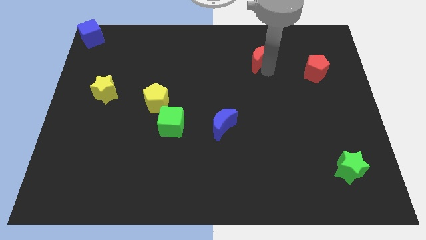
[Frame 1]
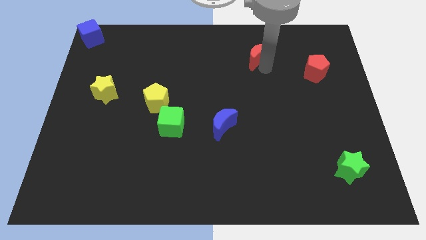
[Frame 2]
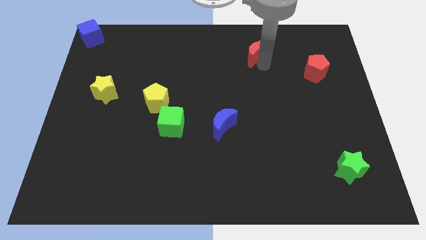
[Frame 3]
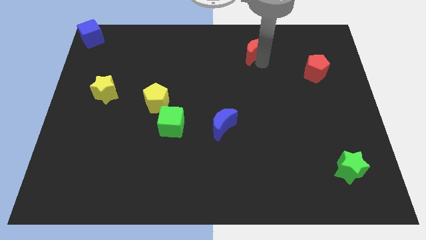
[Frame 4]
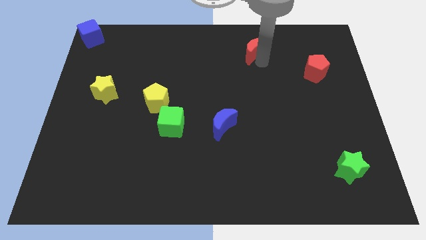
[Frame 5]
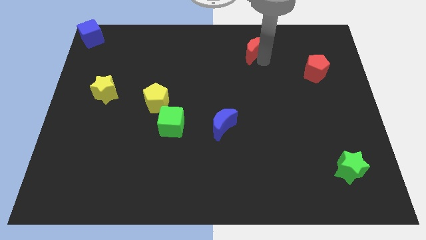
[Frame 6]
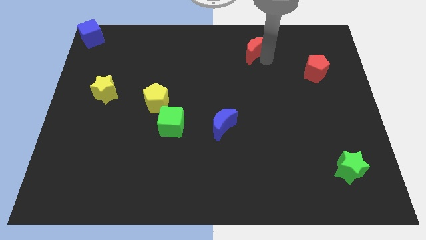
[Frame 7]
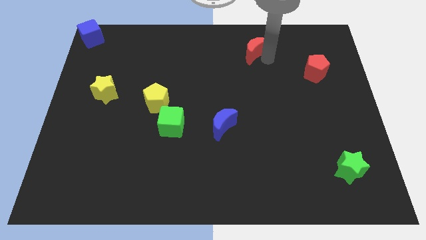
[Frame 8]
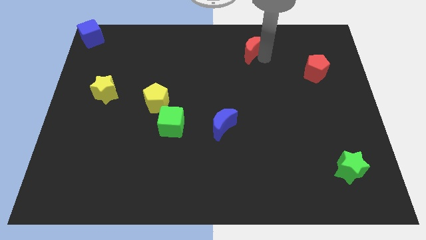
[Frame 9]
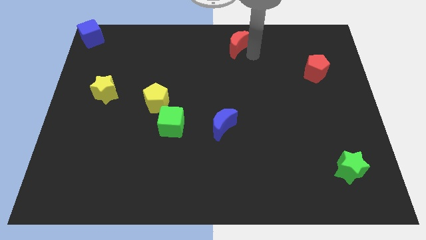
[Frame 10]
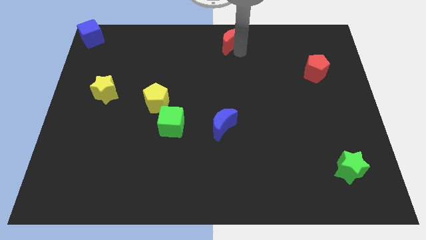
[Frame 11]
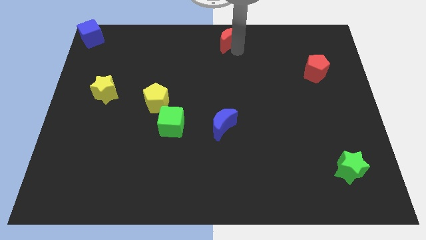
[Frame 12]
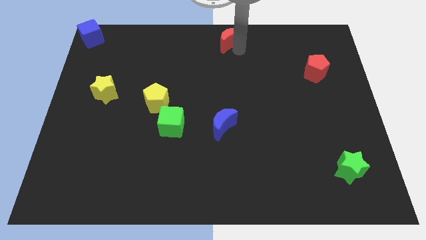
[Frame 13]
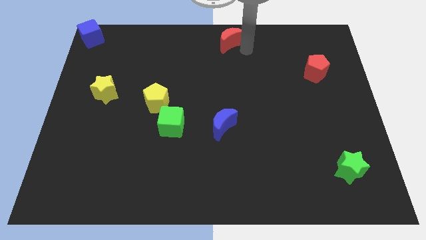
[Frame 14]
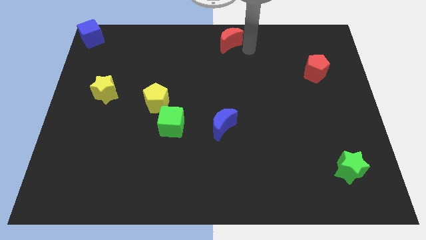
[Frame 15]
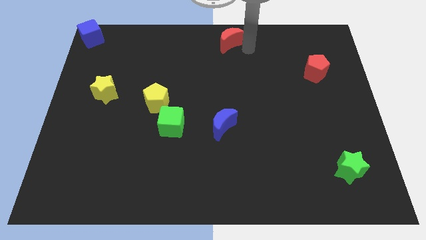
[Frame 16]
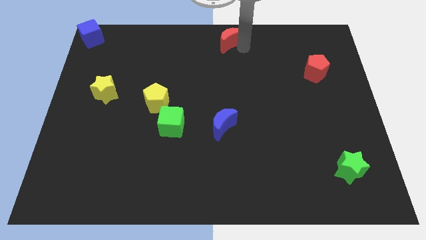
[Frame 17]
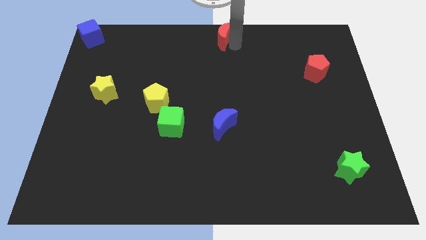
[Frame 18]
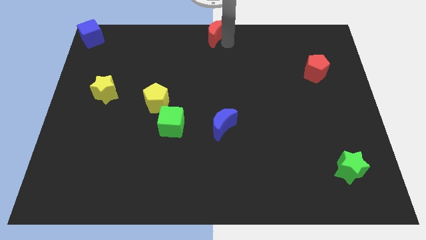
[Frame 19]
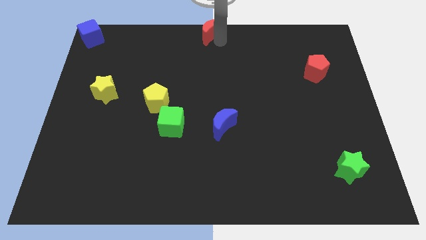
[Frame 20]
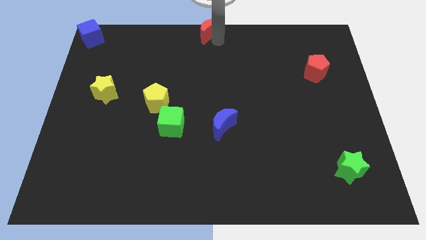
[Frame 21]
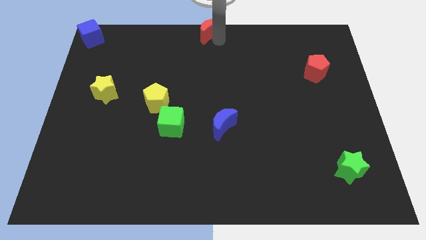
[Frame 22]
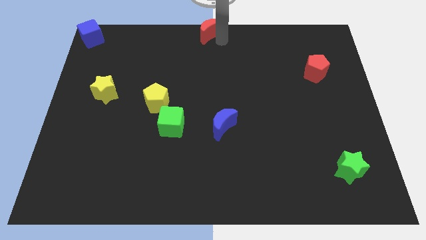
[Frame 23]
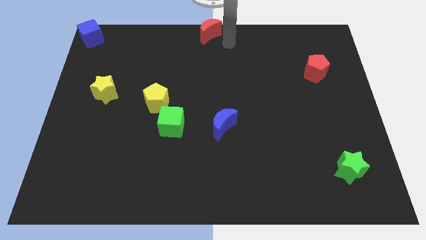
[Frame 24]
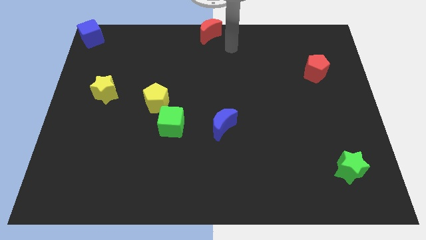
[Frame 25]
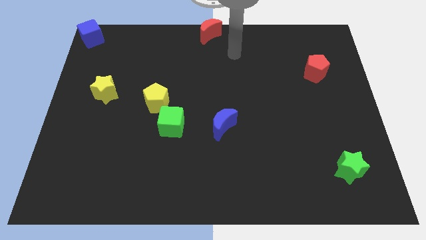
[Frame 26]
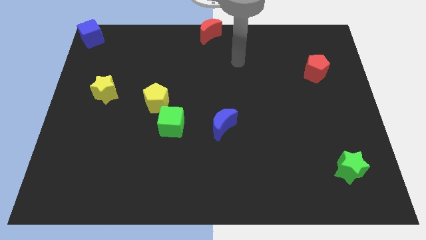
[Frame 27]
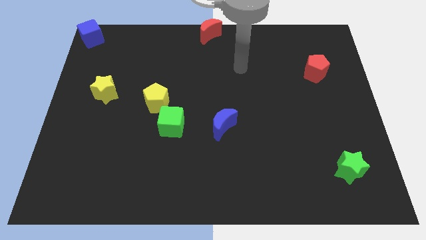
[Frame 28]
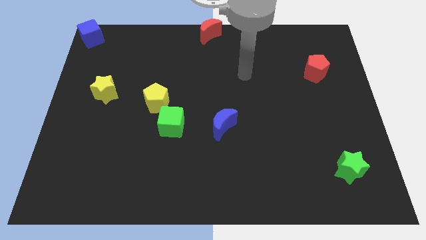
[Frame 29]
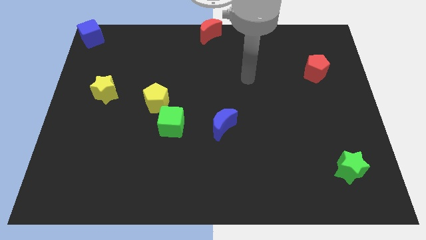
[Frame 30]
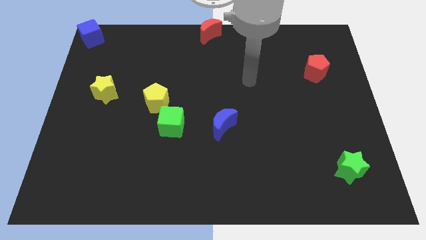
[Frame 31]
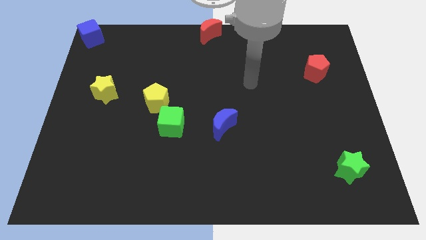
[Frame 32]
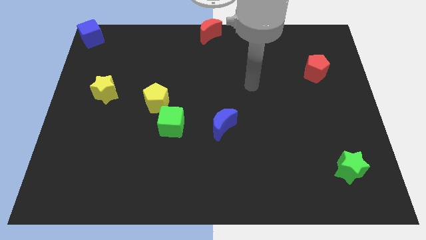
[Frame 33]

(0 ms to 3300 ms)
move the red moon to the top centre

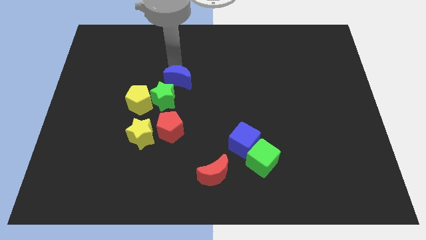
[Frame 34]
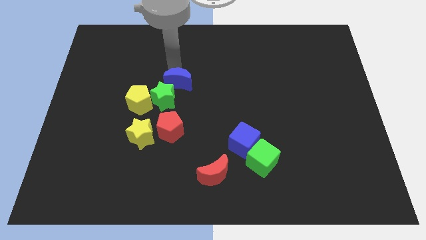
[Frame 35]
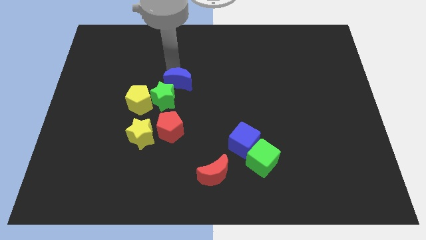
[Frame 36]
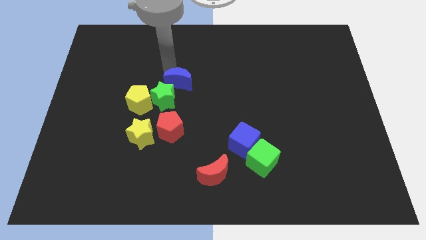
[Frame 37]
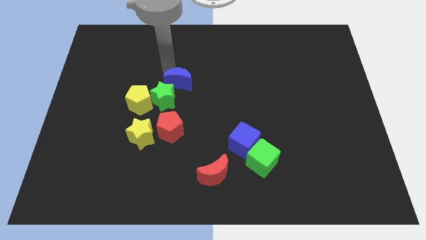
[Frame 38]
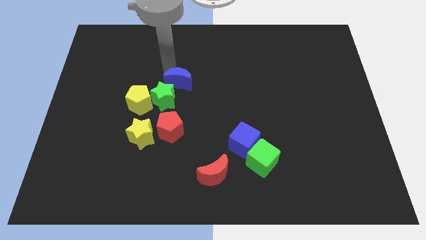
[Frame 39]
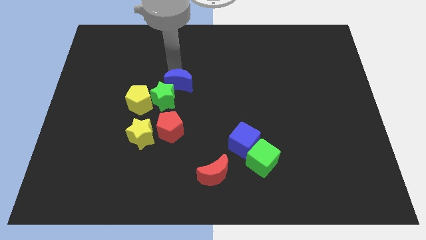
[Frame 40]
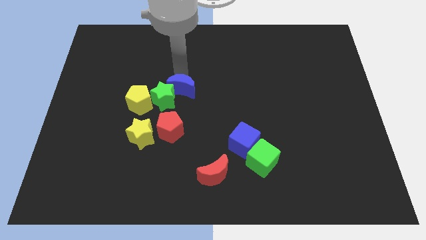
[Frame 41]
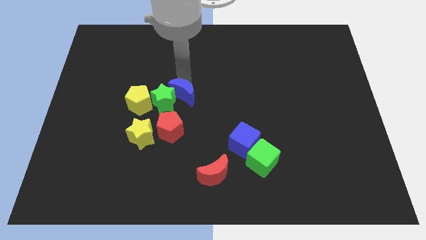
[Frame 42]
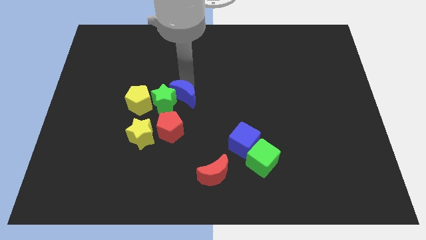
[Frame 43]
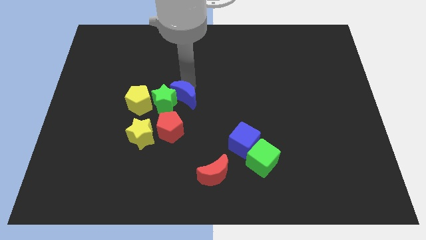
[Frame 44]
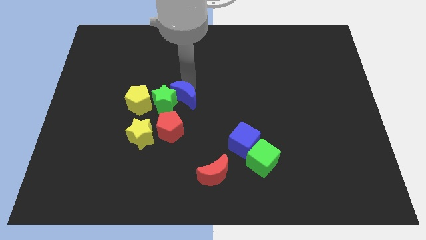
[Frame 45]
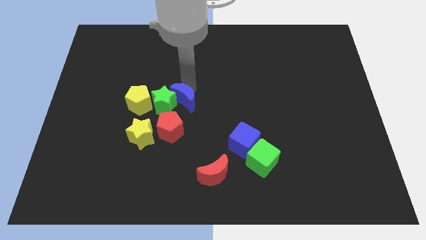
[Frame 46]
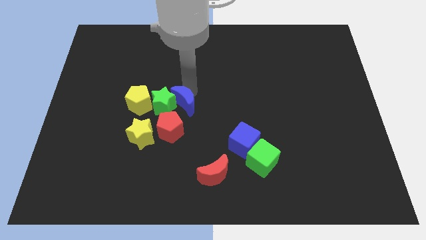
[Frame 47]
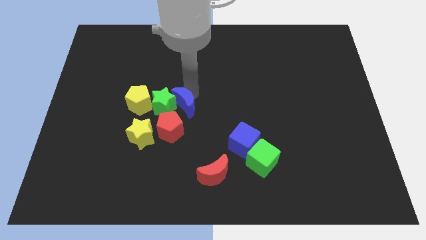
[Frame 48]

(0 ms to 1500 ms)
put the blue crescent on the right side of the green star

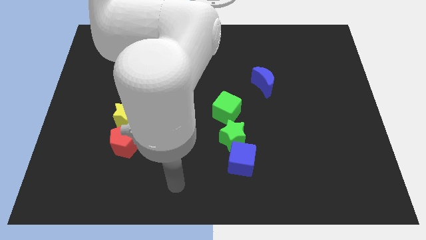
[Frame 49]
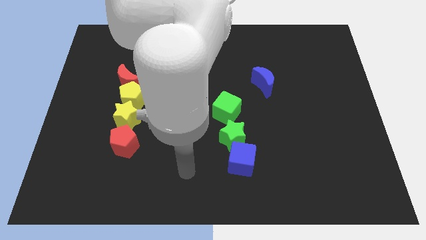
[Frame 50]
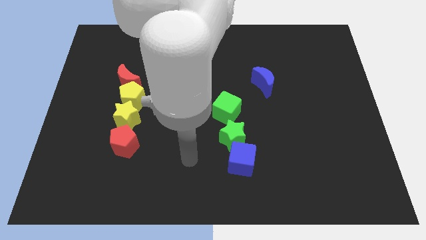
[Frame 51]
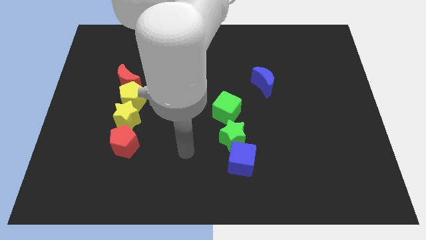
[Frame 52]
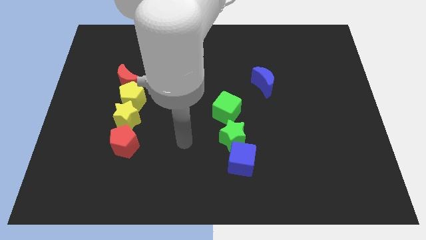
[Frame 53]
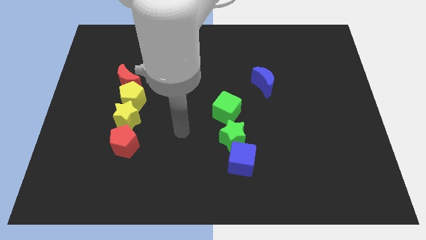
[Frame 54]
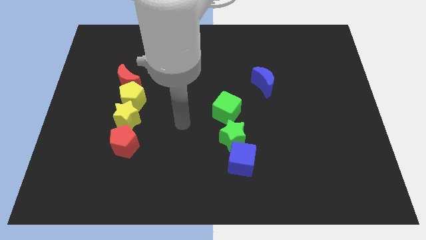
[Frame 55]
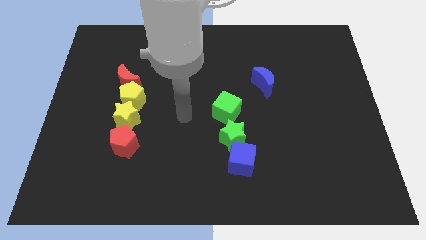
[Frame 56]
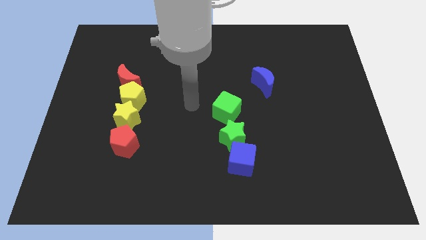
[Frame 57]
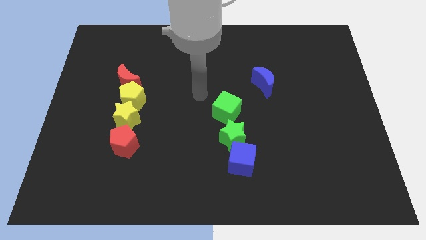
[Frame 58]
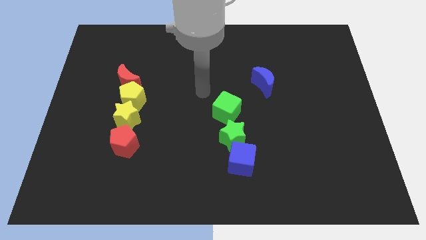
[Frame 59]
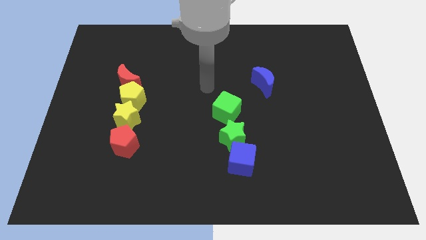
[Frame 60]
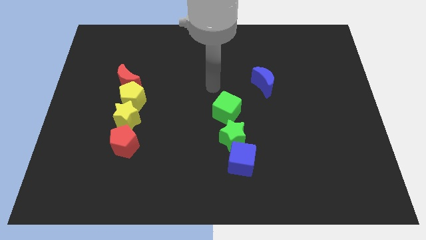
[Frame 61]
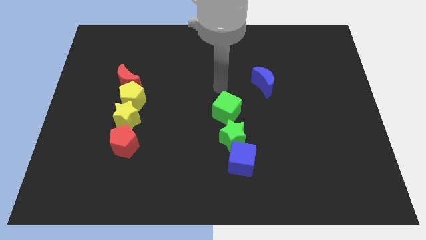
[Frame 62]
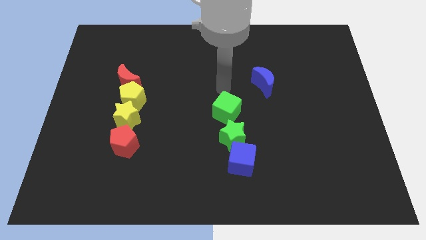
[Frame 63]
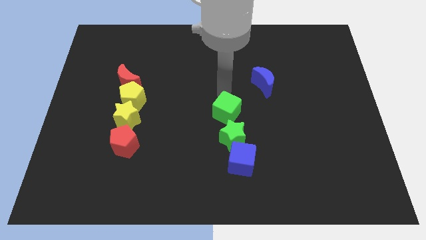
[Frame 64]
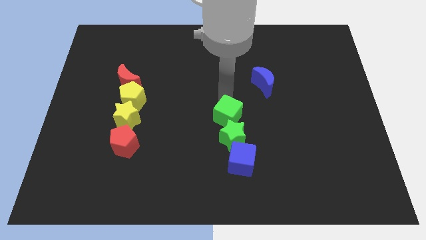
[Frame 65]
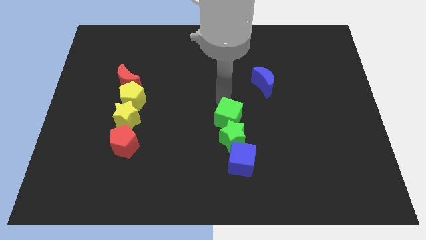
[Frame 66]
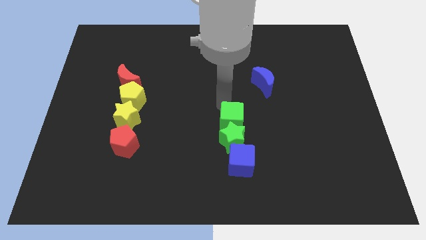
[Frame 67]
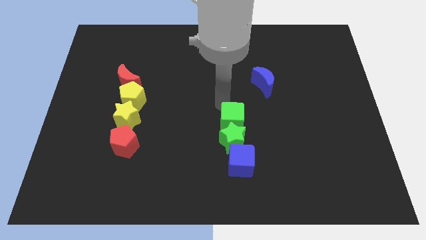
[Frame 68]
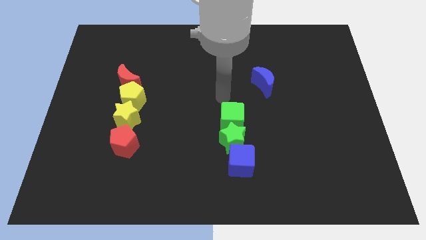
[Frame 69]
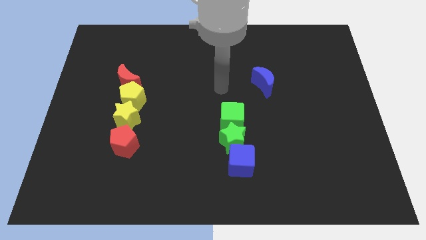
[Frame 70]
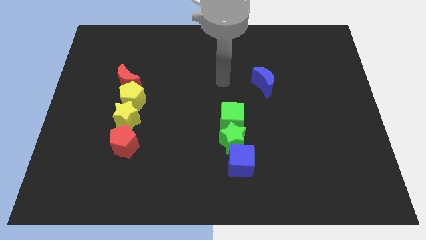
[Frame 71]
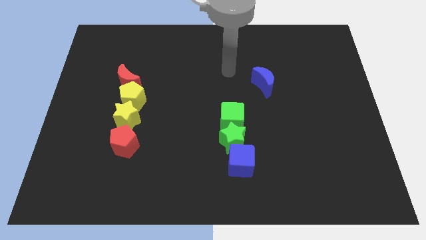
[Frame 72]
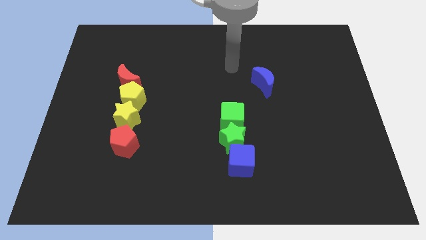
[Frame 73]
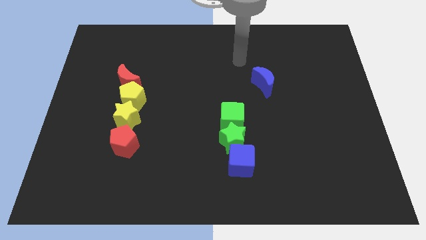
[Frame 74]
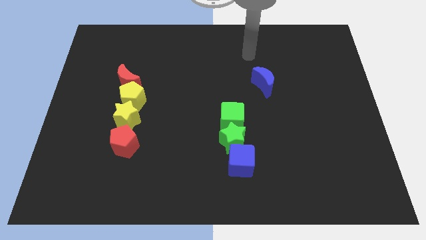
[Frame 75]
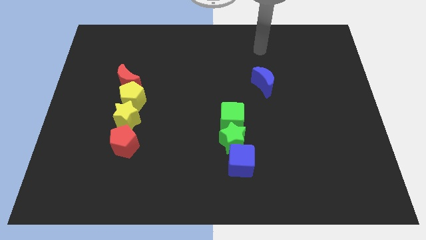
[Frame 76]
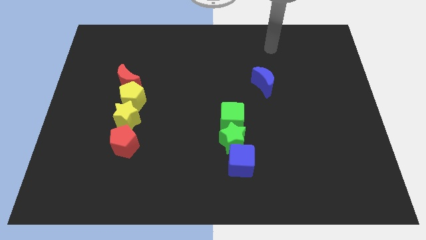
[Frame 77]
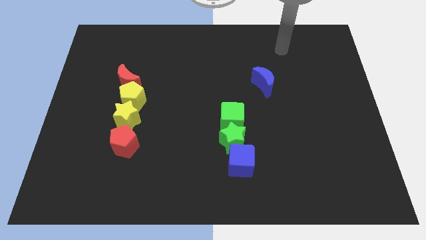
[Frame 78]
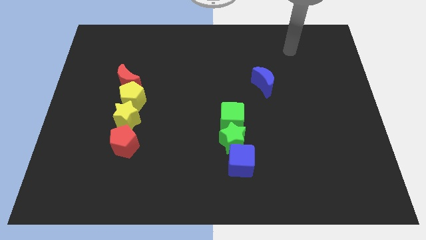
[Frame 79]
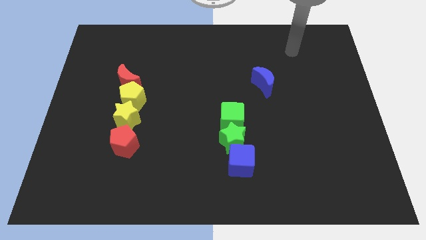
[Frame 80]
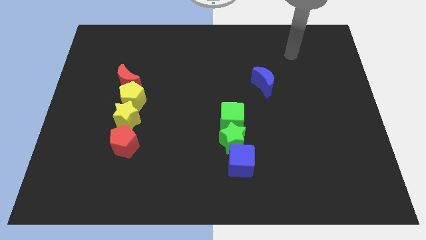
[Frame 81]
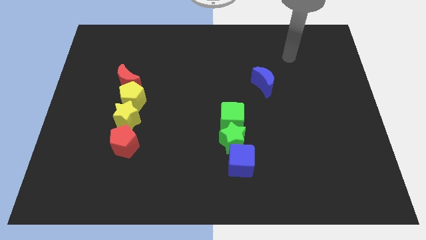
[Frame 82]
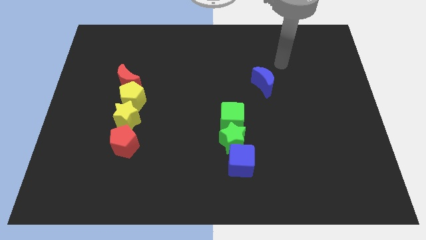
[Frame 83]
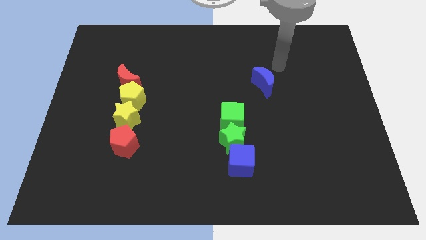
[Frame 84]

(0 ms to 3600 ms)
push the green cube into the green star

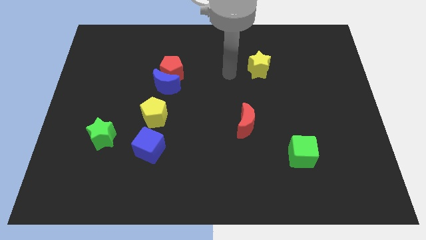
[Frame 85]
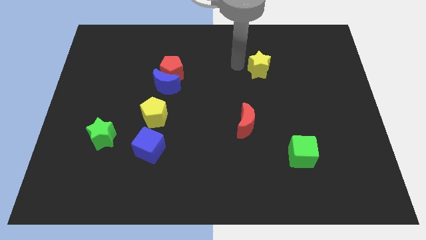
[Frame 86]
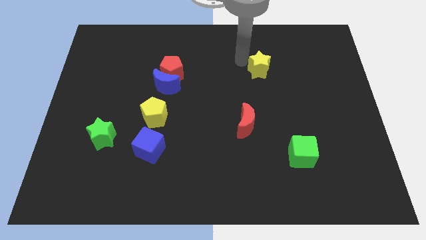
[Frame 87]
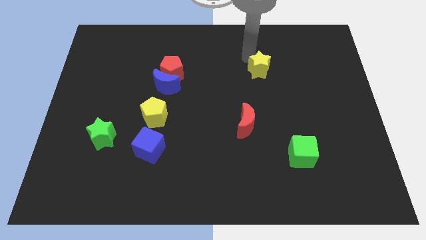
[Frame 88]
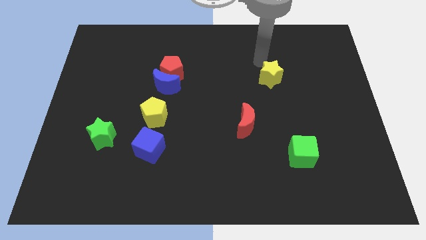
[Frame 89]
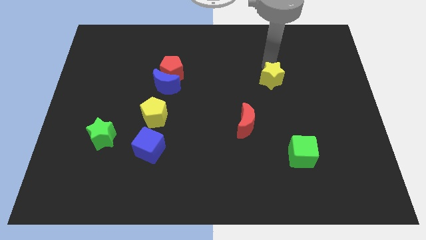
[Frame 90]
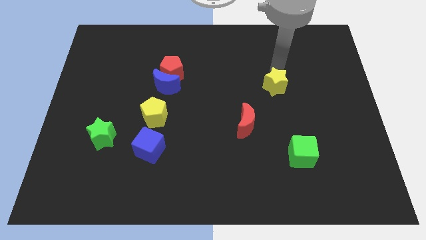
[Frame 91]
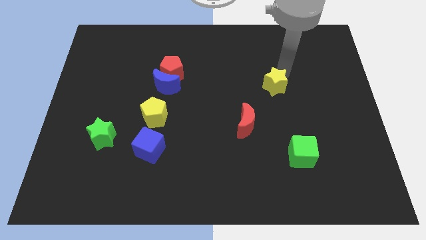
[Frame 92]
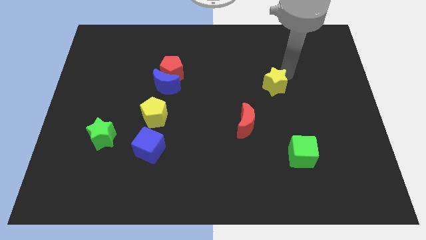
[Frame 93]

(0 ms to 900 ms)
push the yellow star towards the green cube
